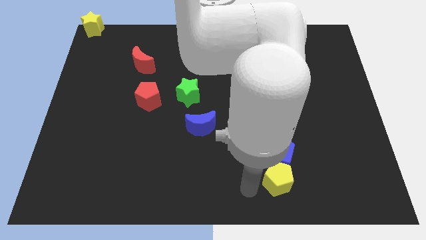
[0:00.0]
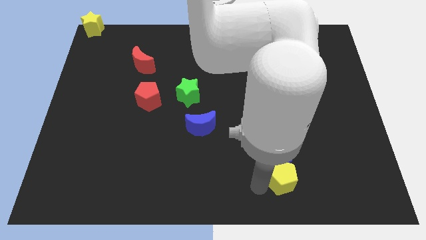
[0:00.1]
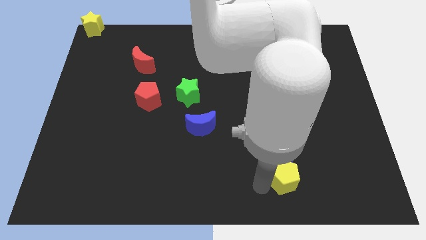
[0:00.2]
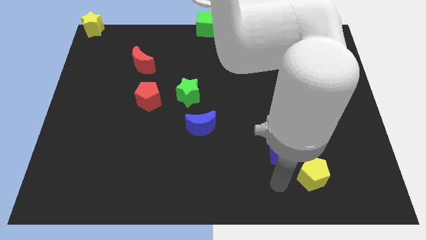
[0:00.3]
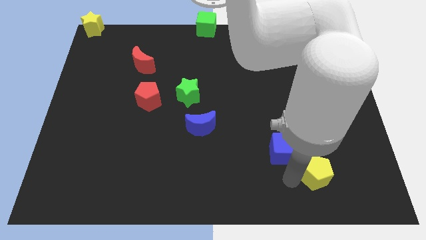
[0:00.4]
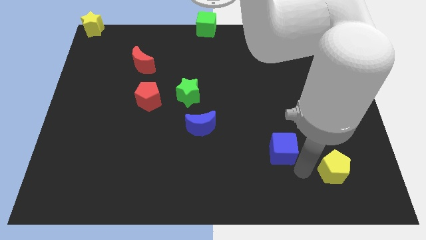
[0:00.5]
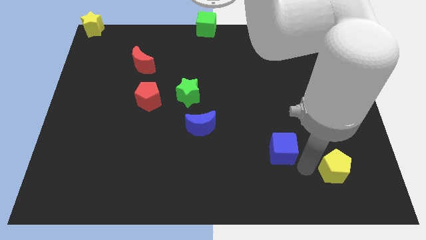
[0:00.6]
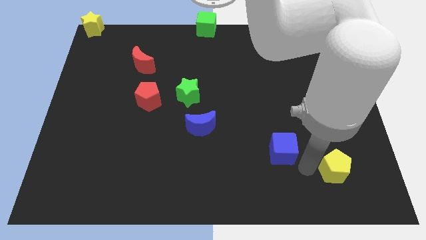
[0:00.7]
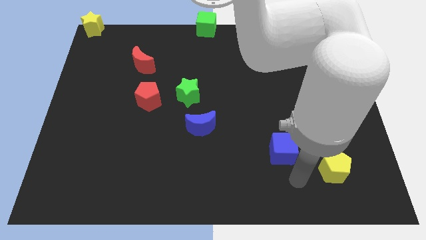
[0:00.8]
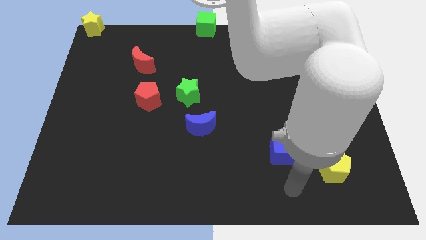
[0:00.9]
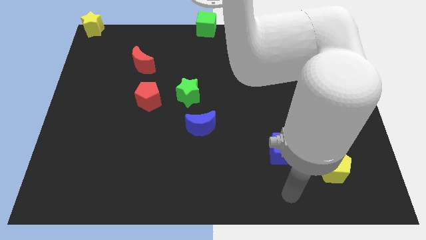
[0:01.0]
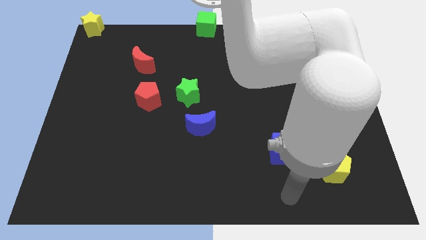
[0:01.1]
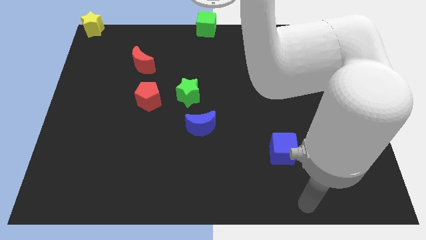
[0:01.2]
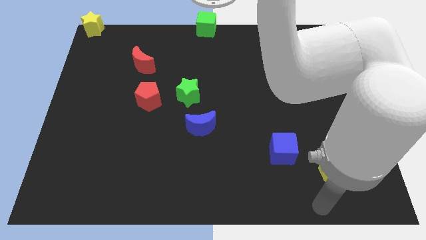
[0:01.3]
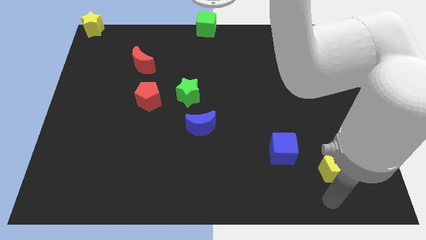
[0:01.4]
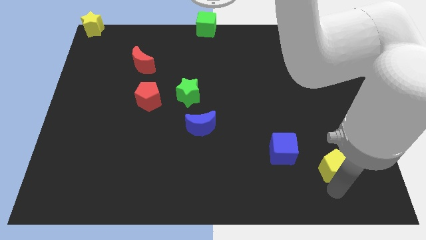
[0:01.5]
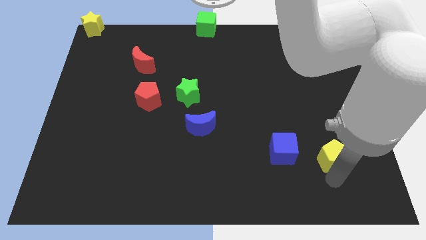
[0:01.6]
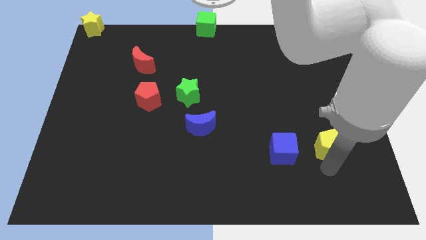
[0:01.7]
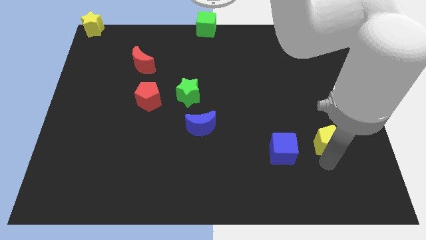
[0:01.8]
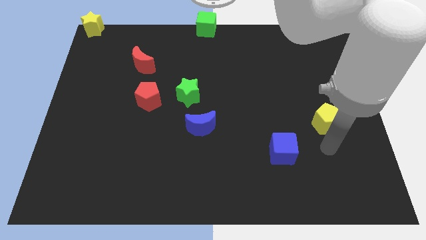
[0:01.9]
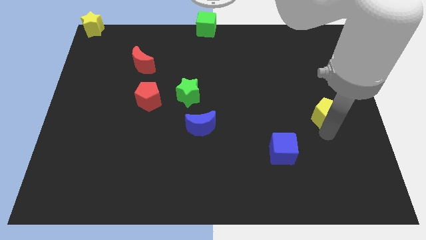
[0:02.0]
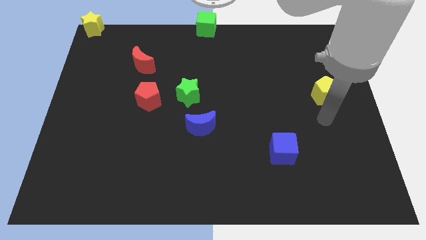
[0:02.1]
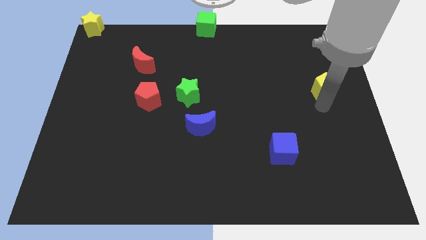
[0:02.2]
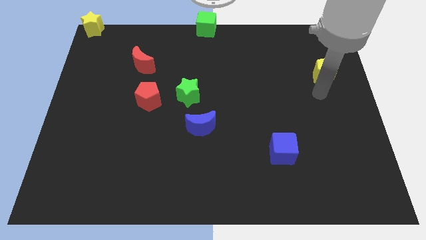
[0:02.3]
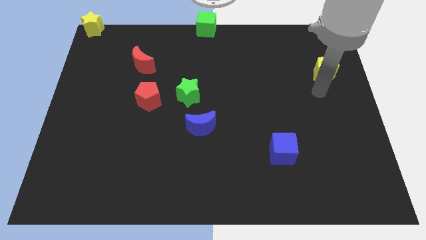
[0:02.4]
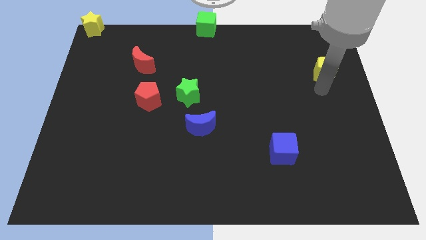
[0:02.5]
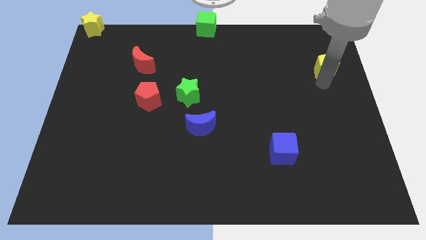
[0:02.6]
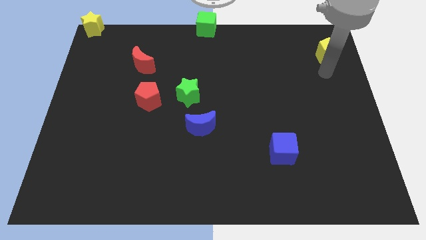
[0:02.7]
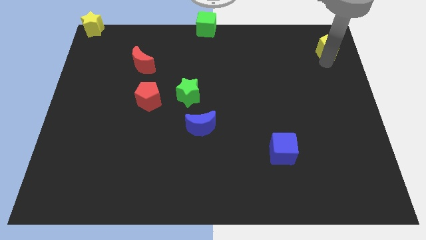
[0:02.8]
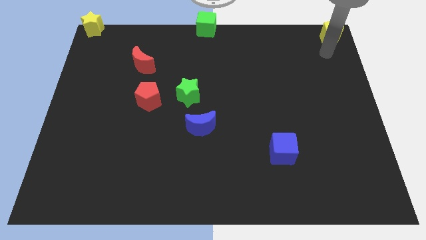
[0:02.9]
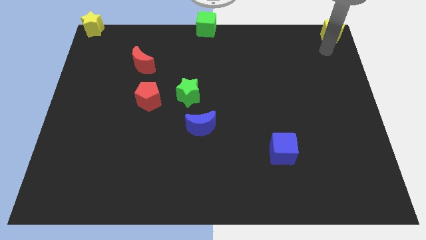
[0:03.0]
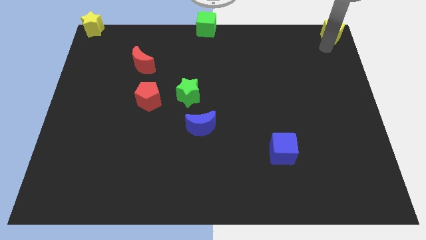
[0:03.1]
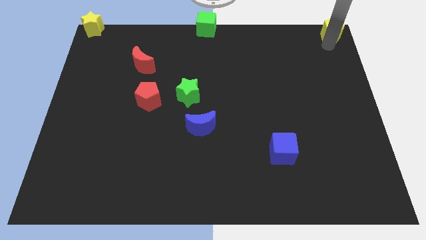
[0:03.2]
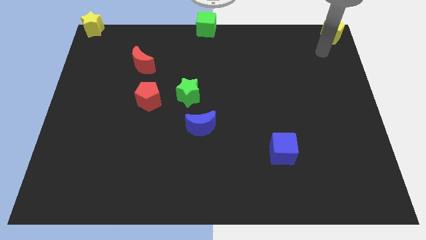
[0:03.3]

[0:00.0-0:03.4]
place the yellow pentagon at the top right corner of the board

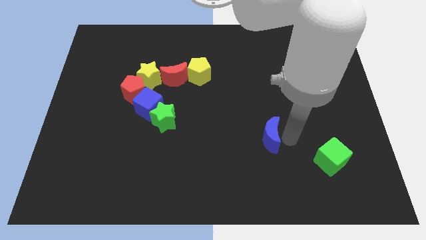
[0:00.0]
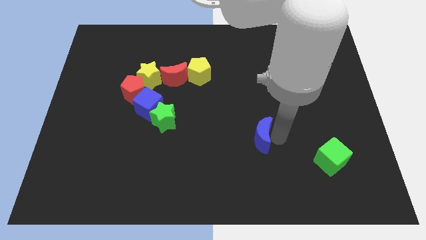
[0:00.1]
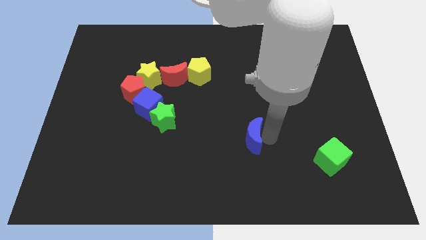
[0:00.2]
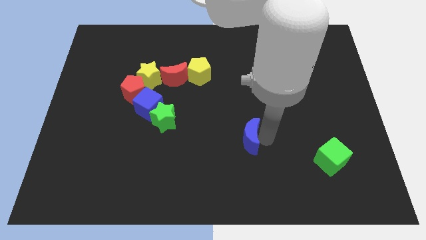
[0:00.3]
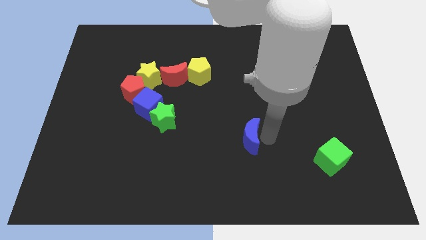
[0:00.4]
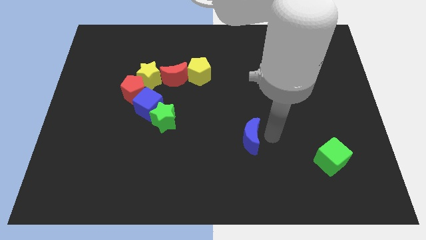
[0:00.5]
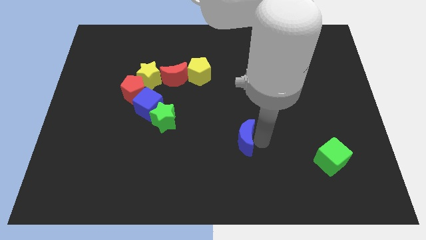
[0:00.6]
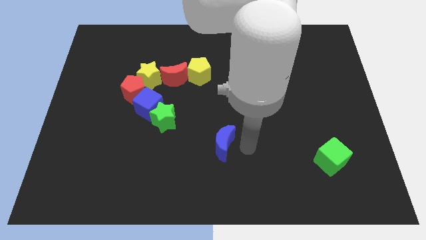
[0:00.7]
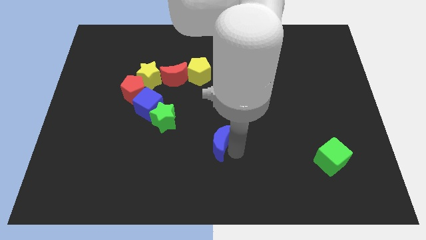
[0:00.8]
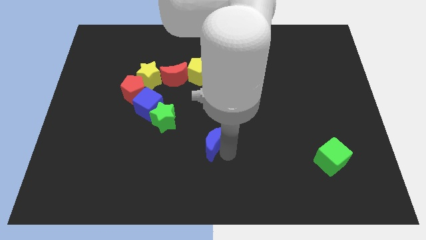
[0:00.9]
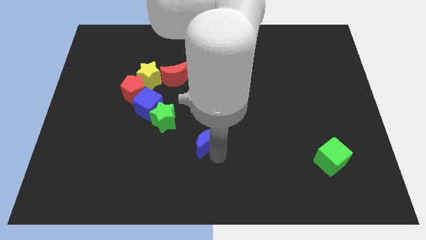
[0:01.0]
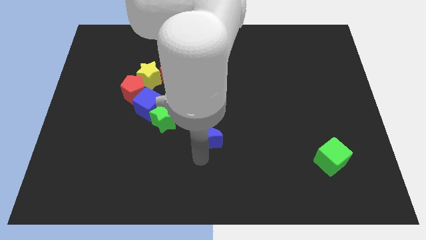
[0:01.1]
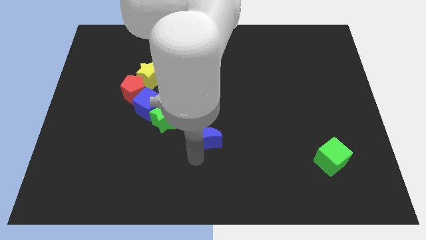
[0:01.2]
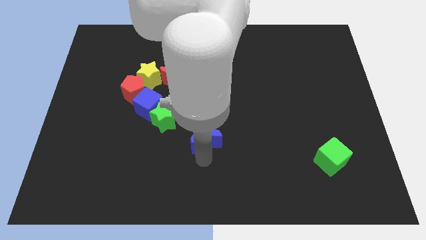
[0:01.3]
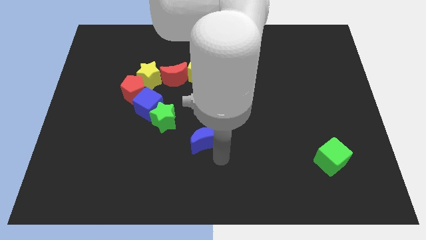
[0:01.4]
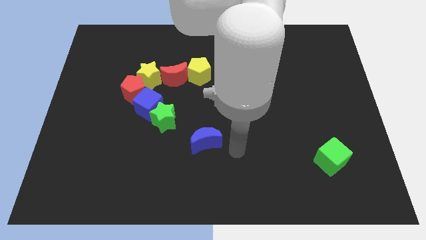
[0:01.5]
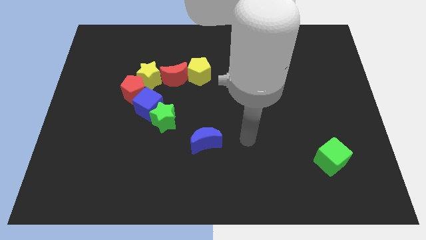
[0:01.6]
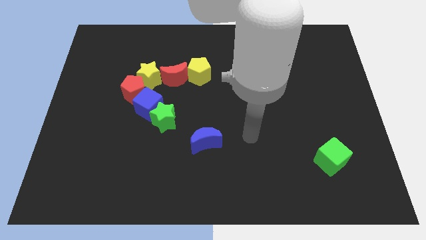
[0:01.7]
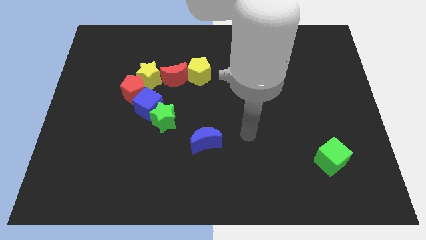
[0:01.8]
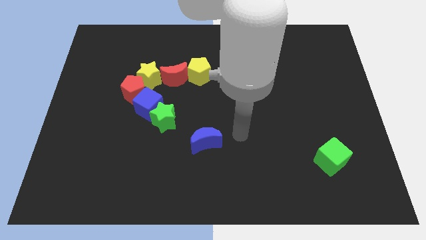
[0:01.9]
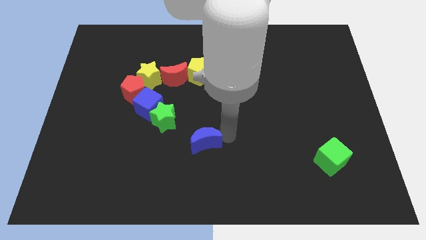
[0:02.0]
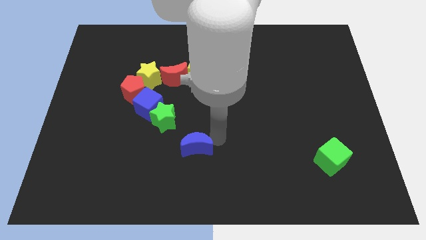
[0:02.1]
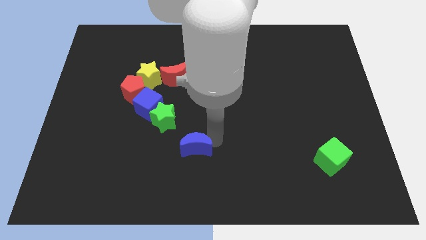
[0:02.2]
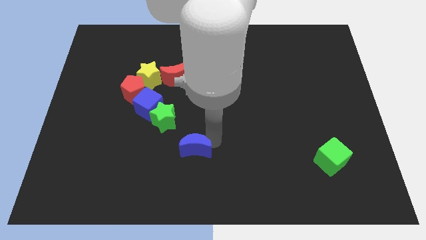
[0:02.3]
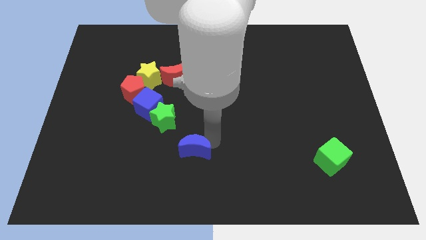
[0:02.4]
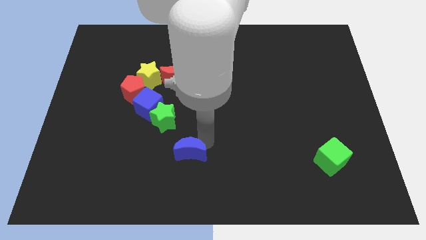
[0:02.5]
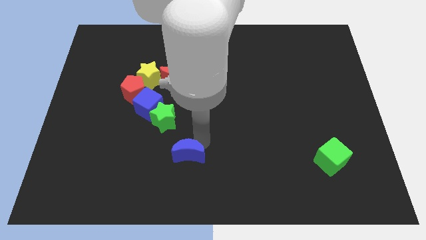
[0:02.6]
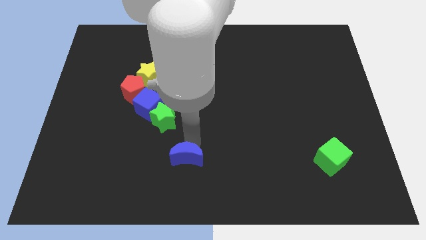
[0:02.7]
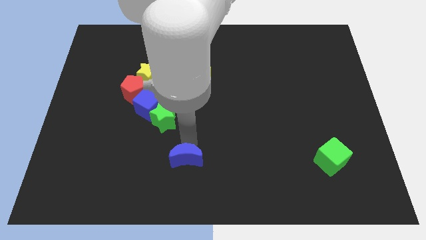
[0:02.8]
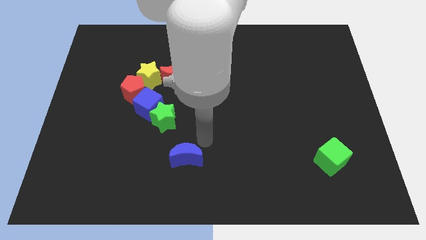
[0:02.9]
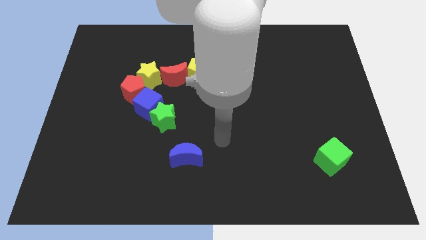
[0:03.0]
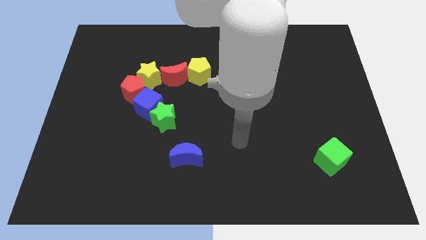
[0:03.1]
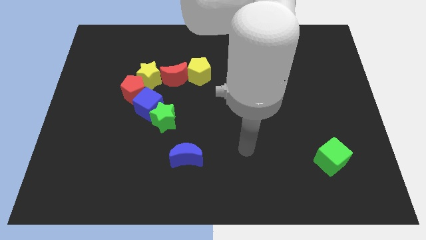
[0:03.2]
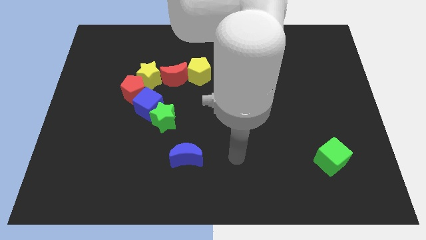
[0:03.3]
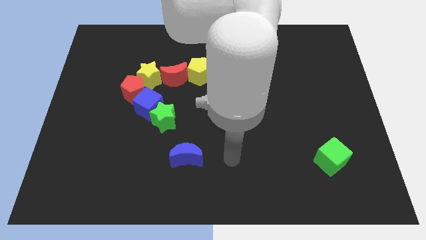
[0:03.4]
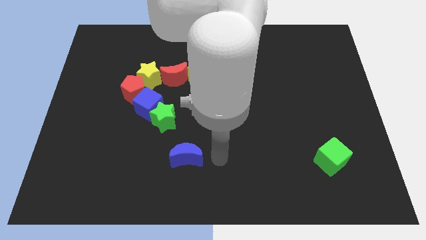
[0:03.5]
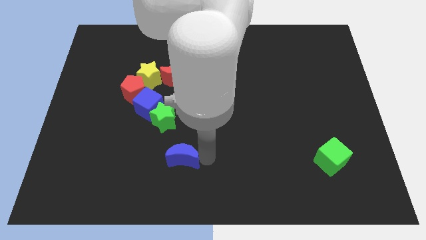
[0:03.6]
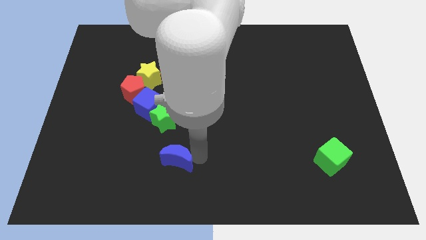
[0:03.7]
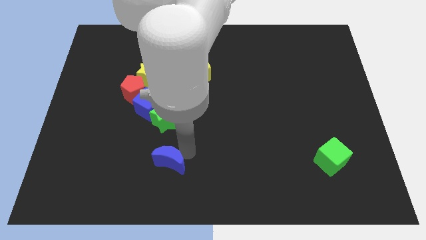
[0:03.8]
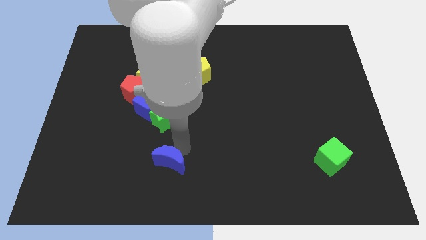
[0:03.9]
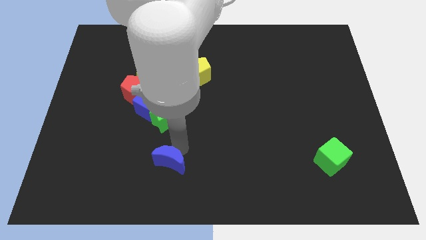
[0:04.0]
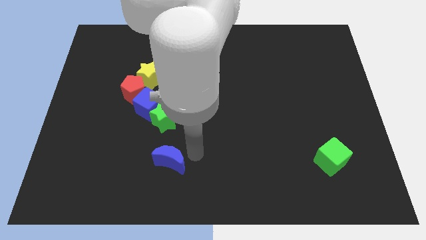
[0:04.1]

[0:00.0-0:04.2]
push the blue crescent to the bottom of the green star

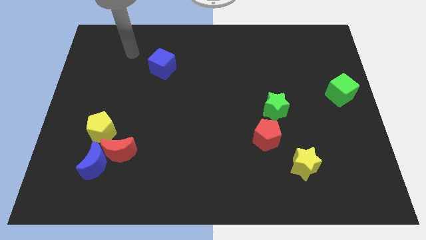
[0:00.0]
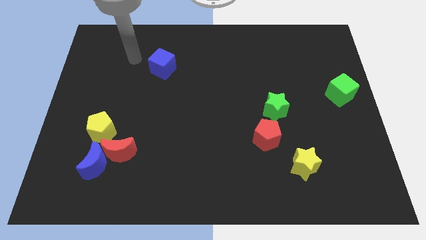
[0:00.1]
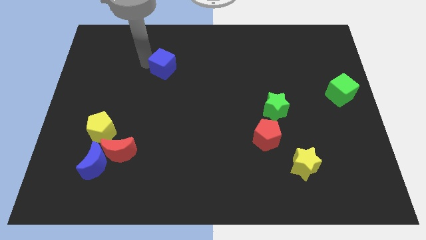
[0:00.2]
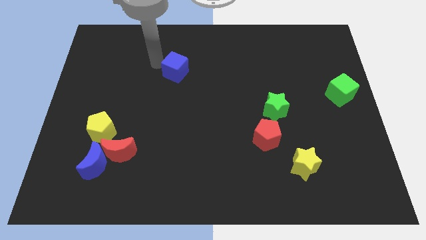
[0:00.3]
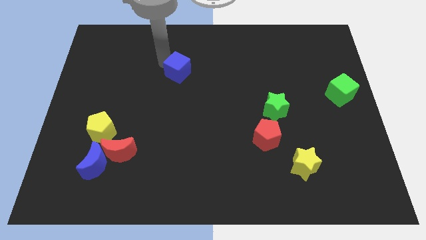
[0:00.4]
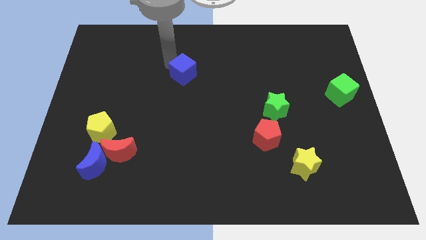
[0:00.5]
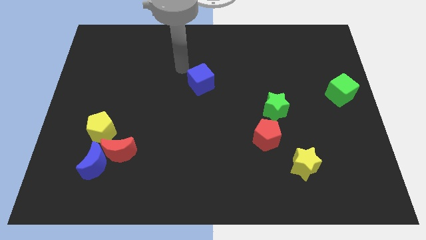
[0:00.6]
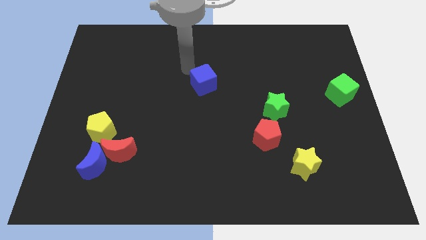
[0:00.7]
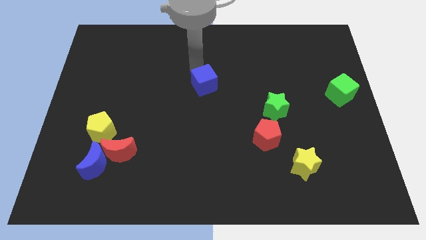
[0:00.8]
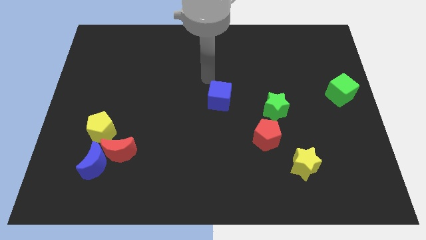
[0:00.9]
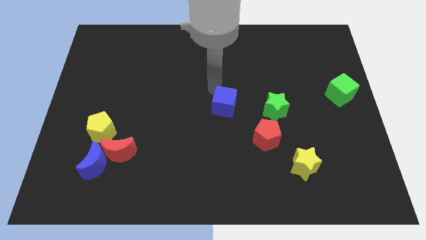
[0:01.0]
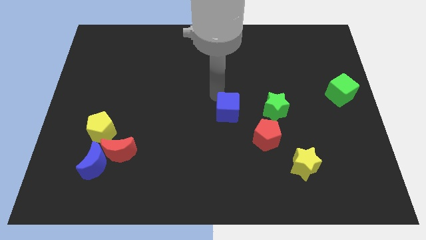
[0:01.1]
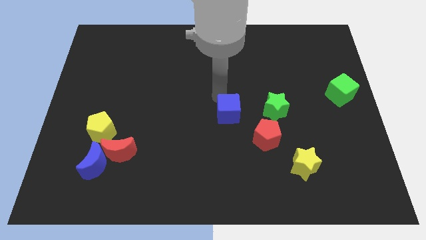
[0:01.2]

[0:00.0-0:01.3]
place blue cube to the left of green star
